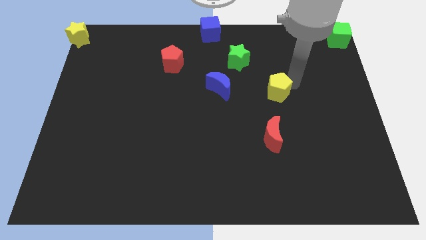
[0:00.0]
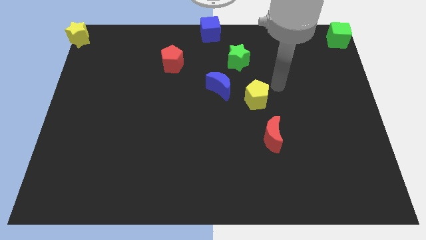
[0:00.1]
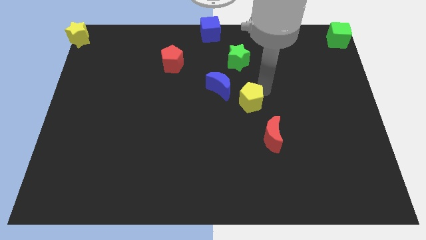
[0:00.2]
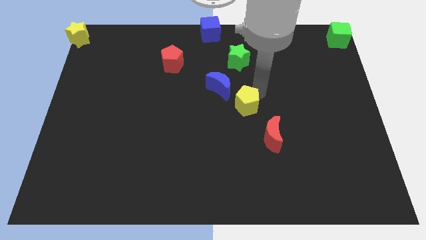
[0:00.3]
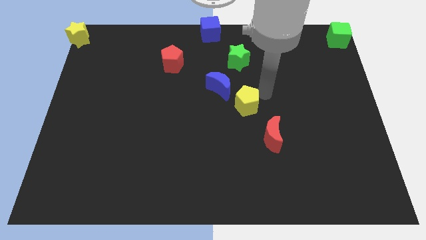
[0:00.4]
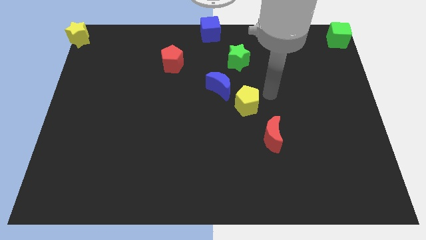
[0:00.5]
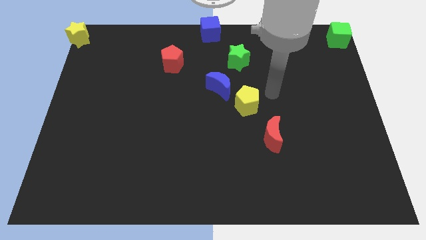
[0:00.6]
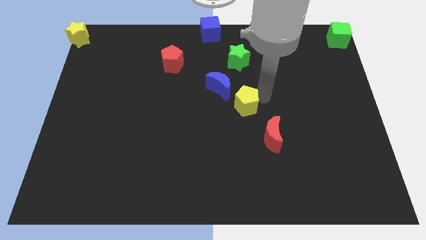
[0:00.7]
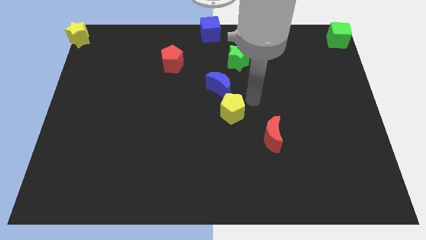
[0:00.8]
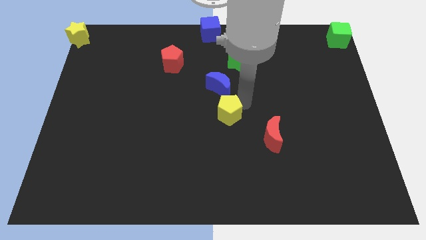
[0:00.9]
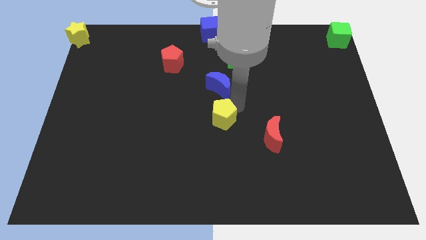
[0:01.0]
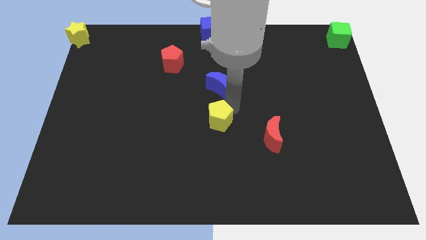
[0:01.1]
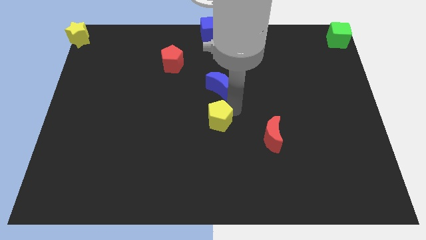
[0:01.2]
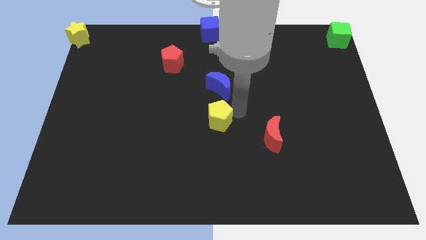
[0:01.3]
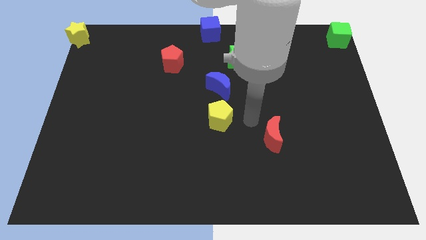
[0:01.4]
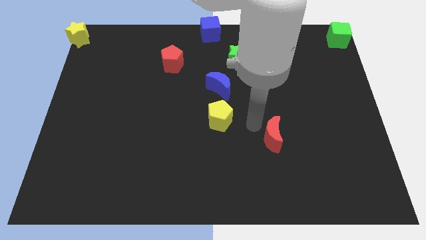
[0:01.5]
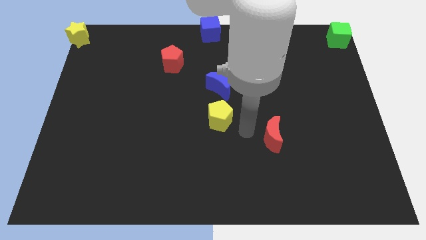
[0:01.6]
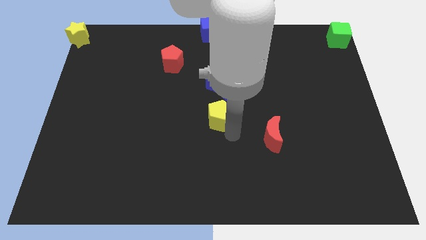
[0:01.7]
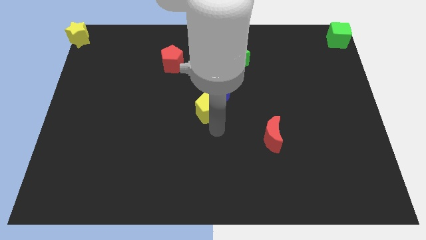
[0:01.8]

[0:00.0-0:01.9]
place the yellow pentagon below the blue moon

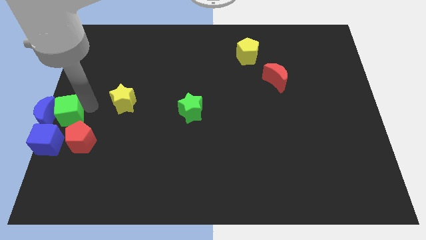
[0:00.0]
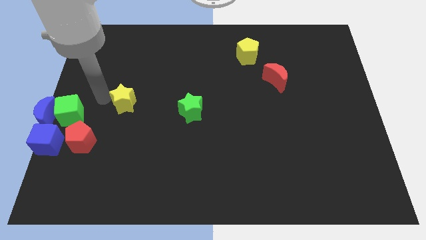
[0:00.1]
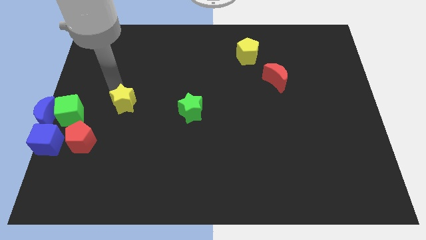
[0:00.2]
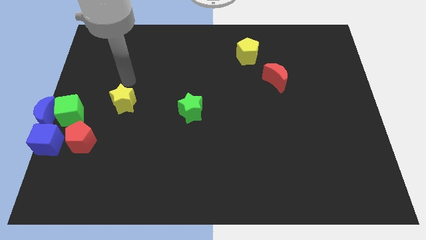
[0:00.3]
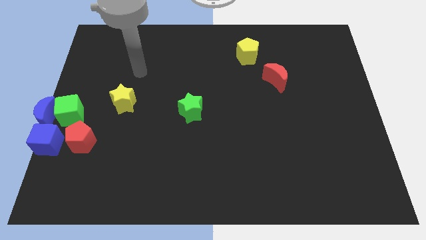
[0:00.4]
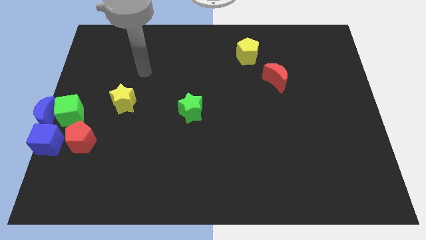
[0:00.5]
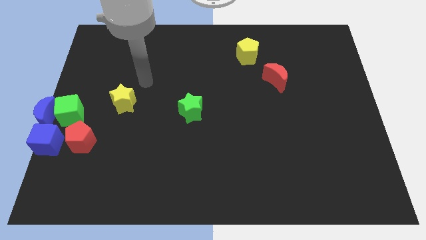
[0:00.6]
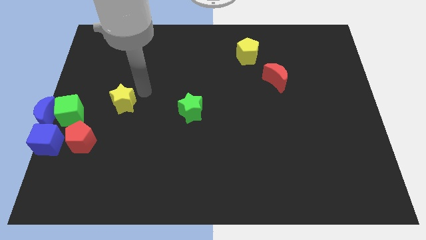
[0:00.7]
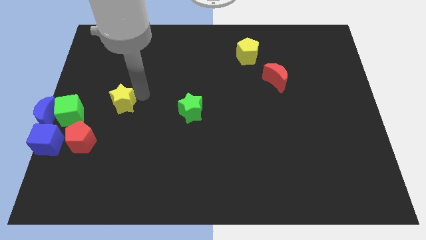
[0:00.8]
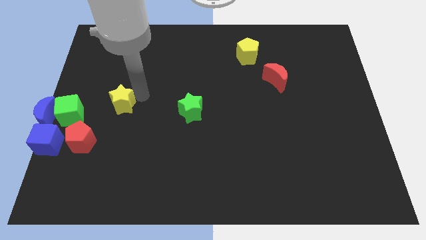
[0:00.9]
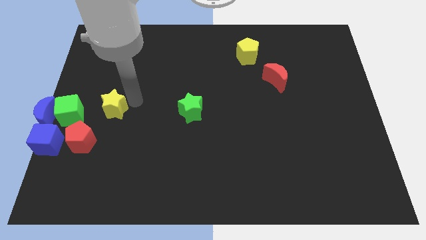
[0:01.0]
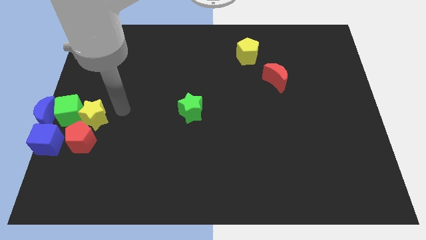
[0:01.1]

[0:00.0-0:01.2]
push the yellow star into the green cube

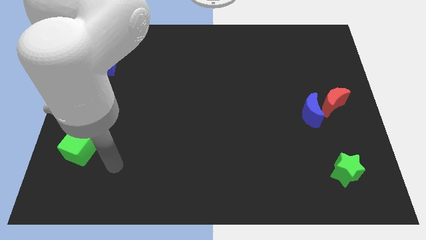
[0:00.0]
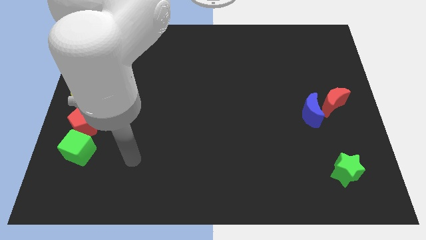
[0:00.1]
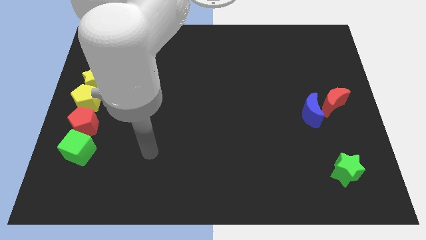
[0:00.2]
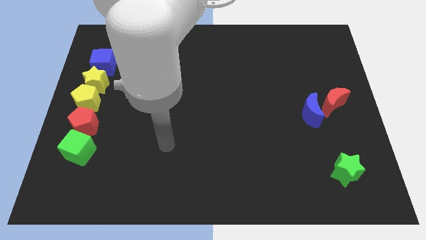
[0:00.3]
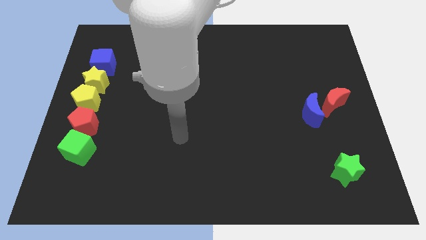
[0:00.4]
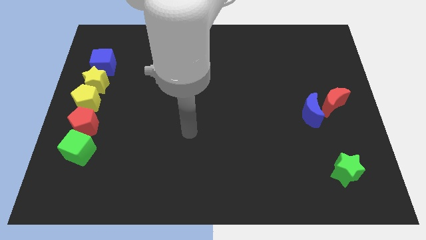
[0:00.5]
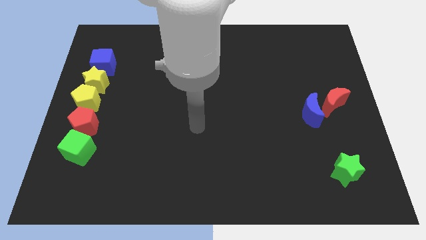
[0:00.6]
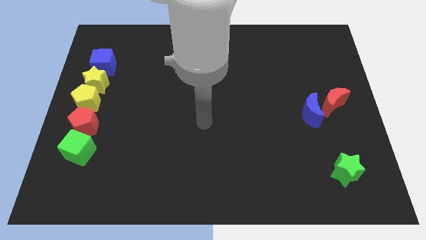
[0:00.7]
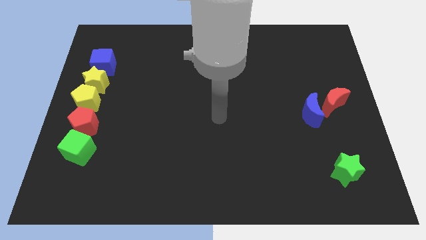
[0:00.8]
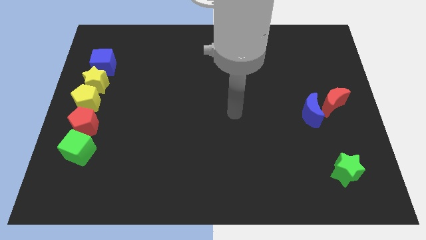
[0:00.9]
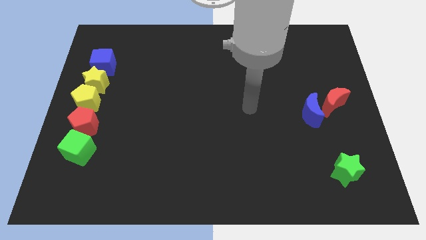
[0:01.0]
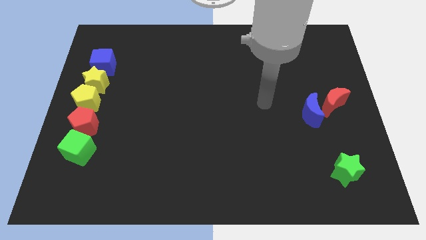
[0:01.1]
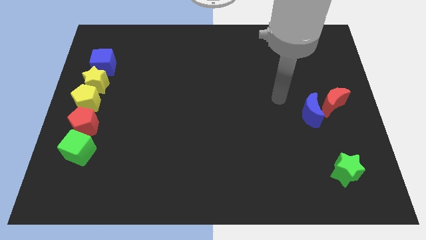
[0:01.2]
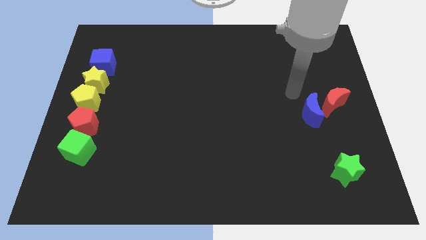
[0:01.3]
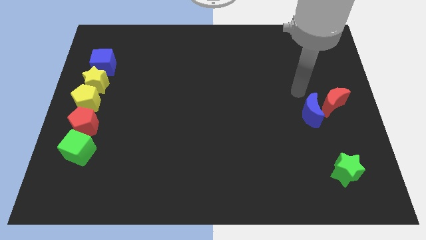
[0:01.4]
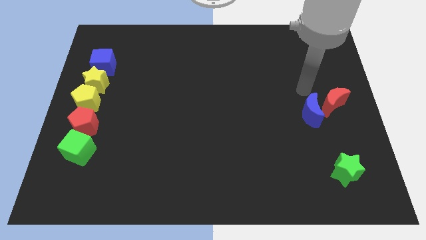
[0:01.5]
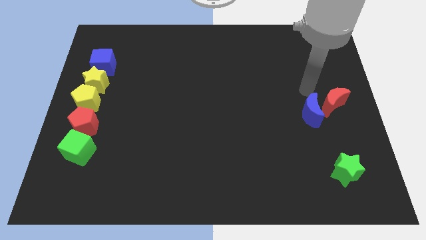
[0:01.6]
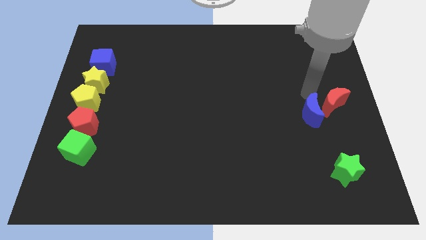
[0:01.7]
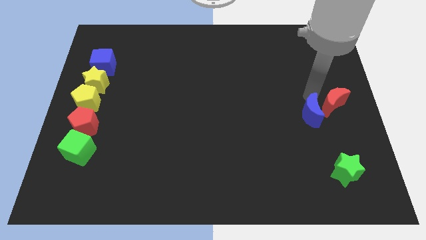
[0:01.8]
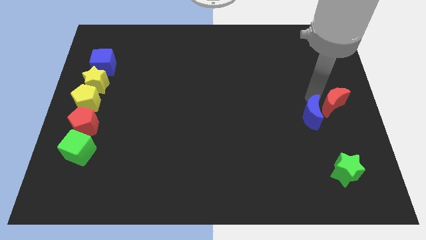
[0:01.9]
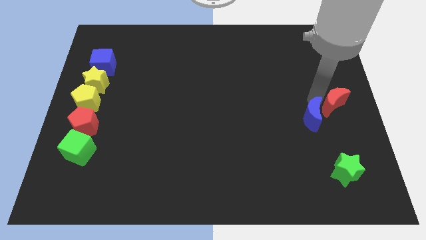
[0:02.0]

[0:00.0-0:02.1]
point your arm above blue moon

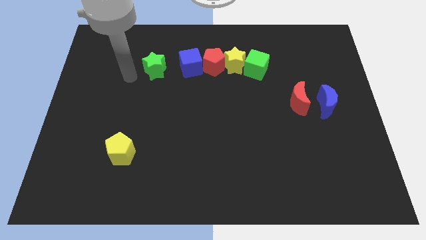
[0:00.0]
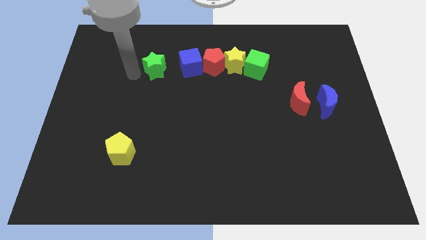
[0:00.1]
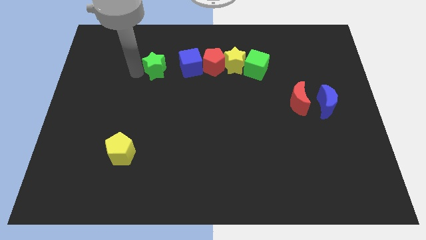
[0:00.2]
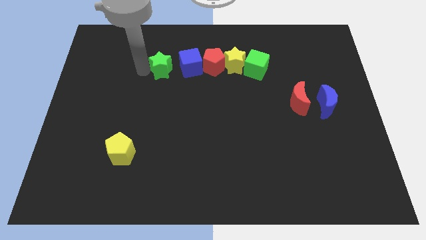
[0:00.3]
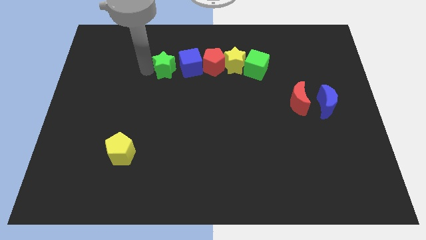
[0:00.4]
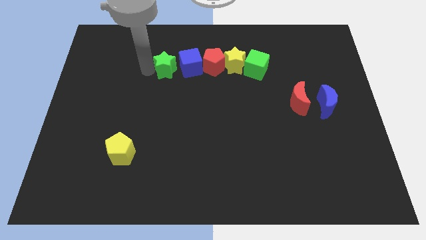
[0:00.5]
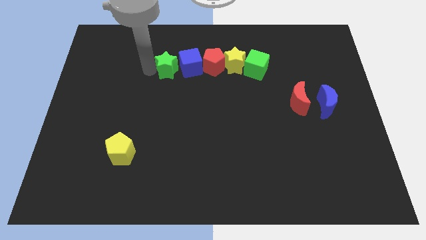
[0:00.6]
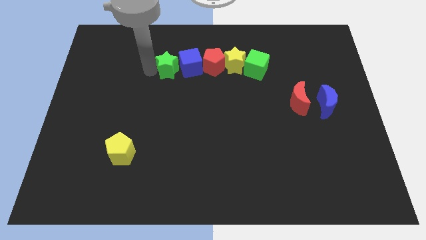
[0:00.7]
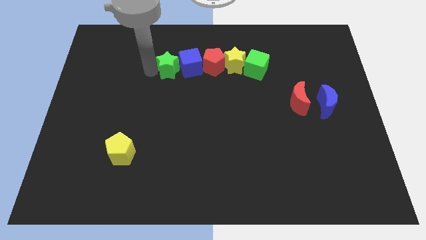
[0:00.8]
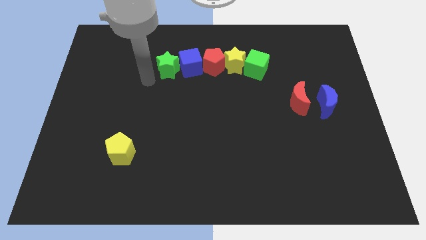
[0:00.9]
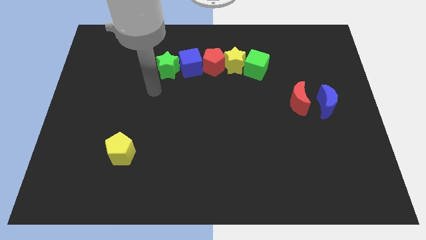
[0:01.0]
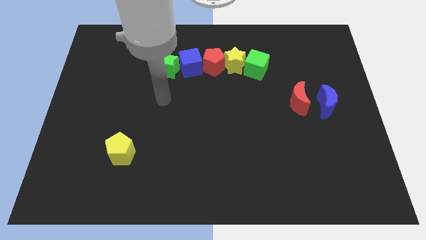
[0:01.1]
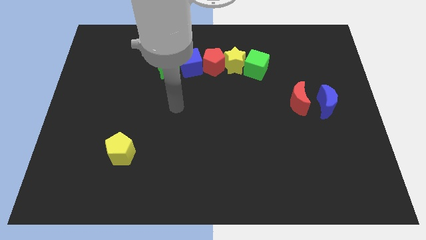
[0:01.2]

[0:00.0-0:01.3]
move green star to the left of the blue cube

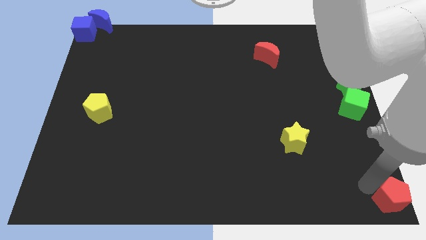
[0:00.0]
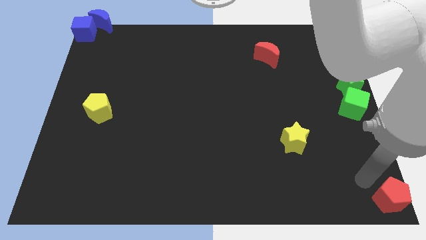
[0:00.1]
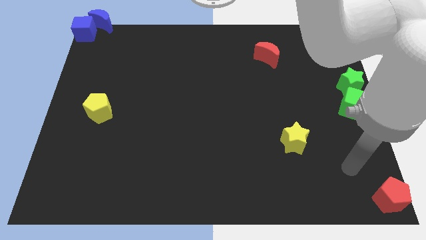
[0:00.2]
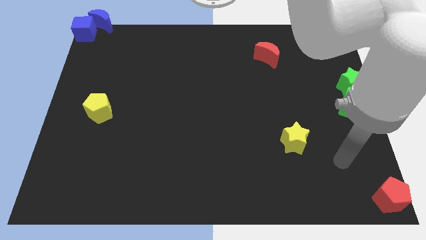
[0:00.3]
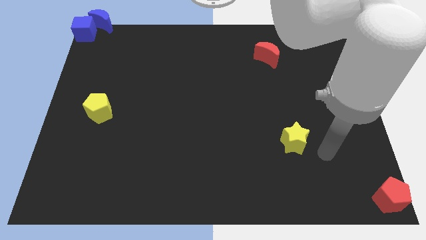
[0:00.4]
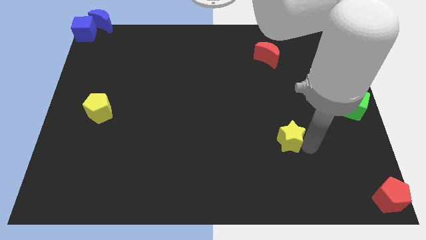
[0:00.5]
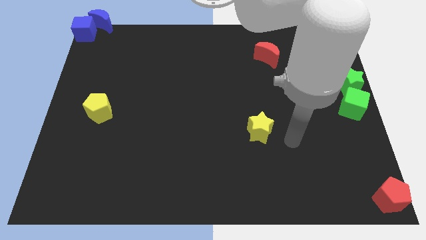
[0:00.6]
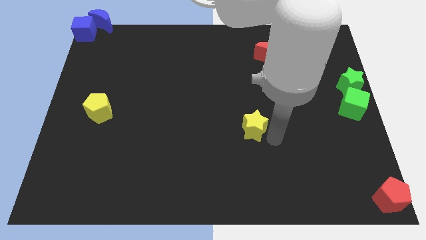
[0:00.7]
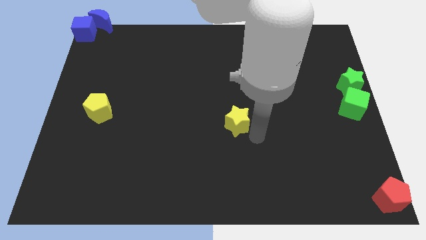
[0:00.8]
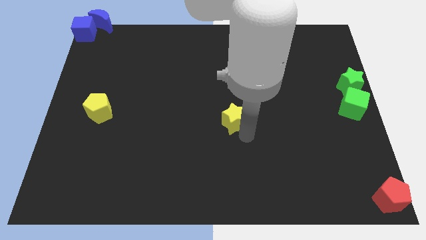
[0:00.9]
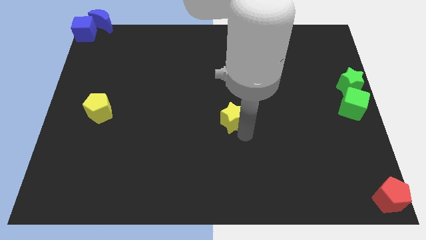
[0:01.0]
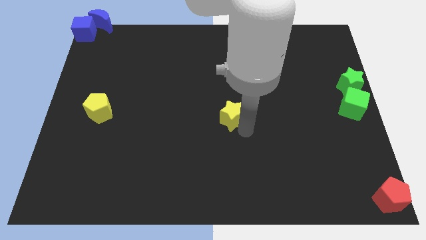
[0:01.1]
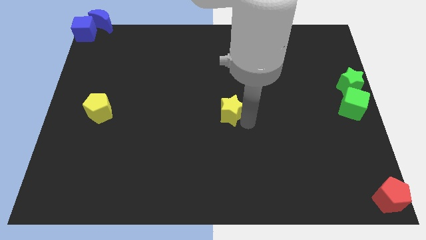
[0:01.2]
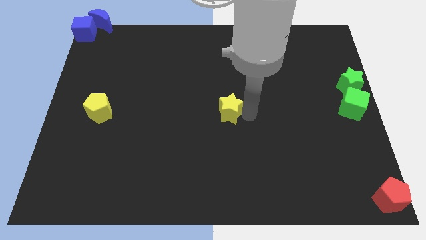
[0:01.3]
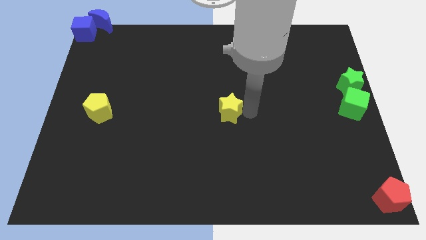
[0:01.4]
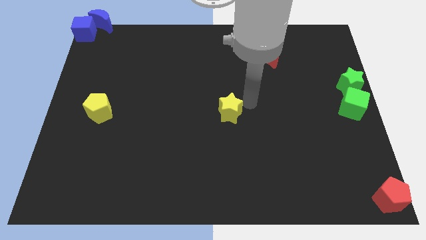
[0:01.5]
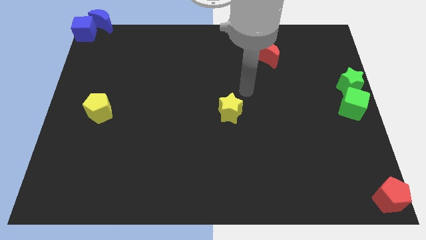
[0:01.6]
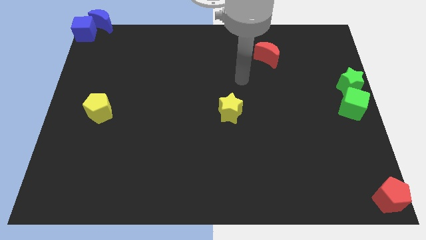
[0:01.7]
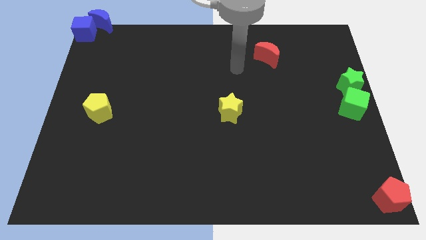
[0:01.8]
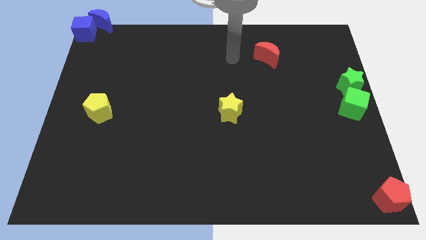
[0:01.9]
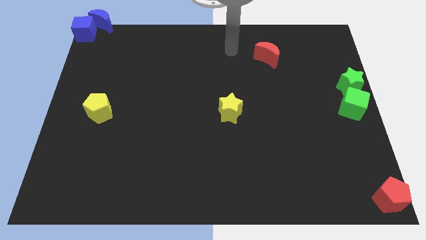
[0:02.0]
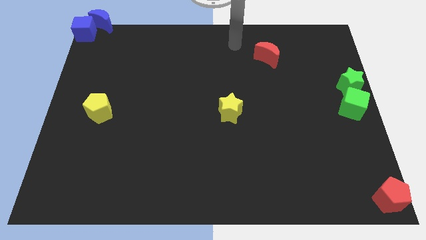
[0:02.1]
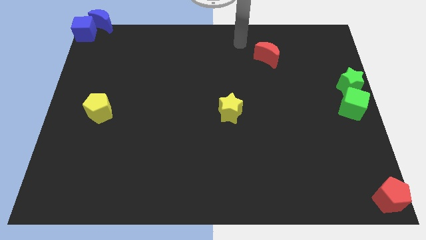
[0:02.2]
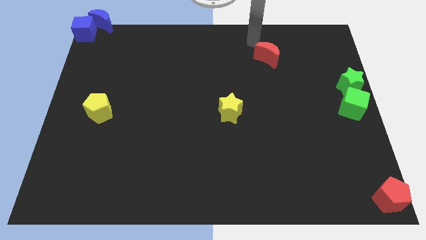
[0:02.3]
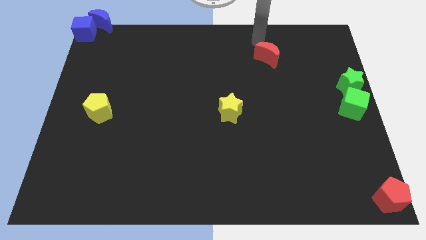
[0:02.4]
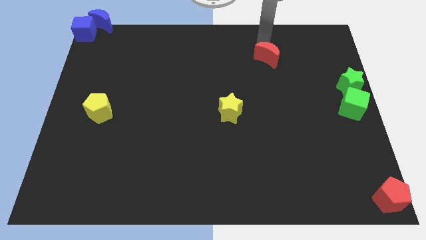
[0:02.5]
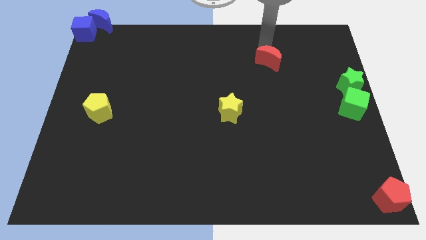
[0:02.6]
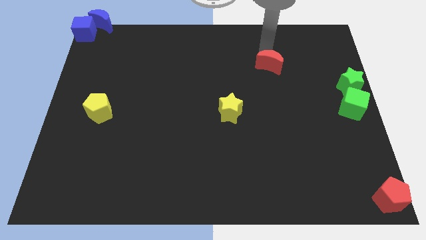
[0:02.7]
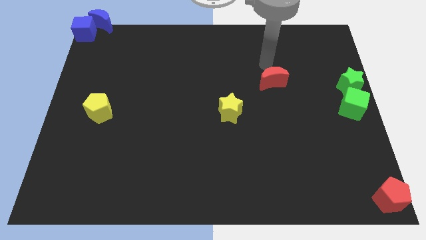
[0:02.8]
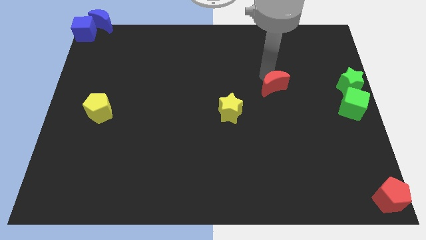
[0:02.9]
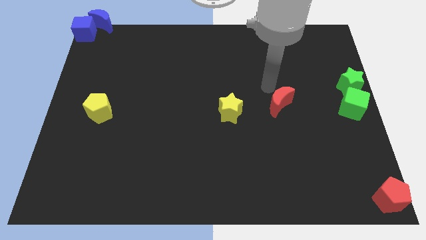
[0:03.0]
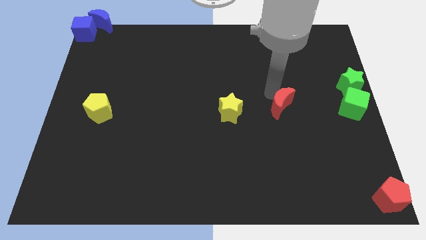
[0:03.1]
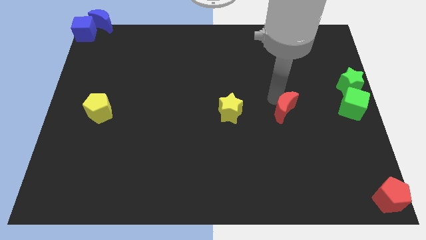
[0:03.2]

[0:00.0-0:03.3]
make the yellow star and red moon parallel to each other
